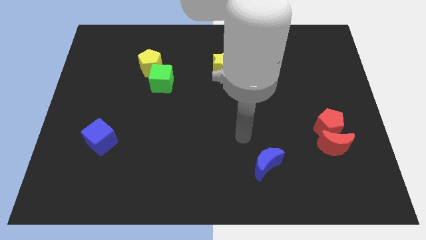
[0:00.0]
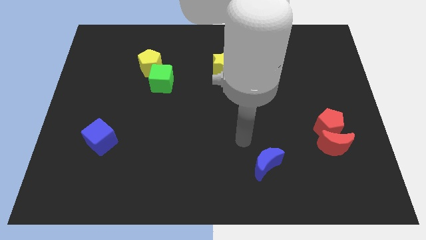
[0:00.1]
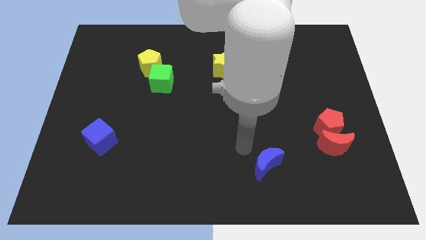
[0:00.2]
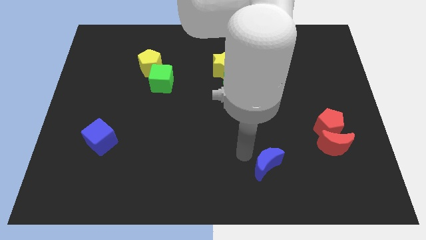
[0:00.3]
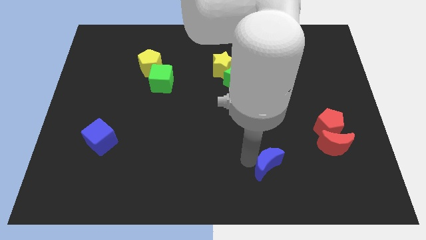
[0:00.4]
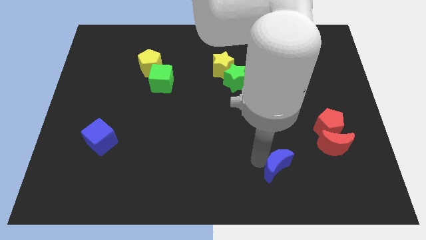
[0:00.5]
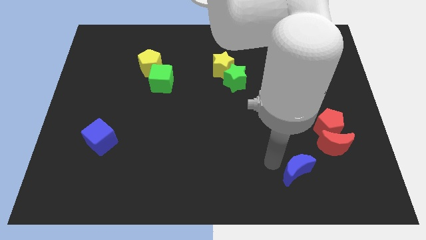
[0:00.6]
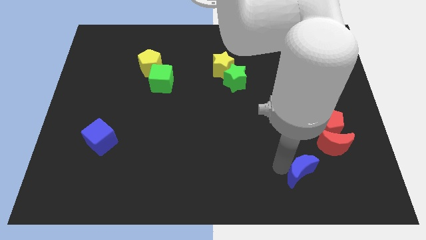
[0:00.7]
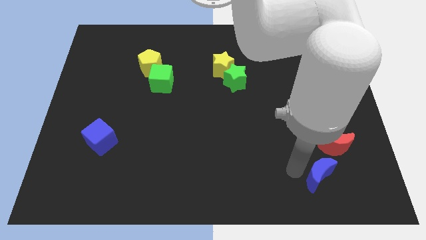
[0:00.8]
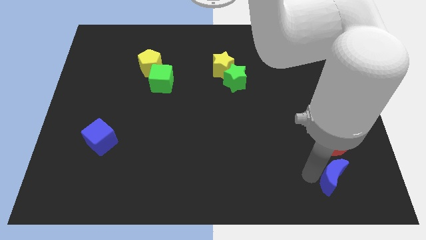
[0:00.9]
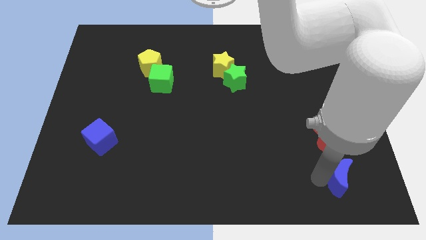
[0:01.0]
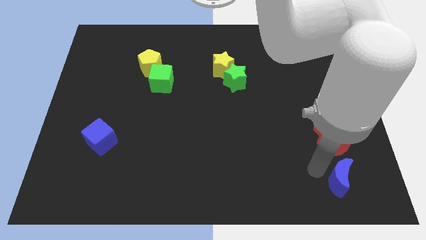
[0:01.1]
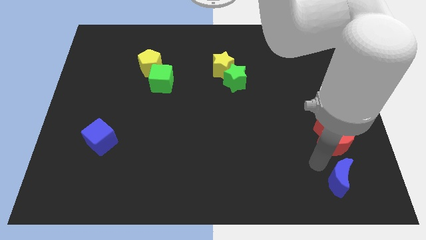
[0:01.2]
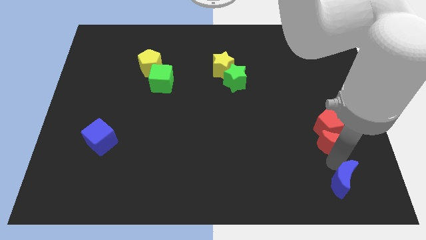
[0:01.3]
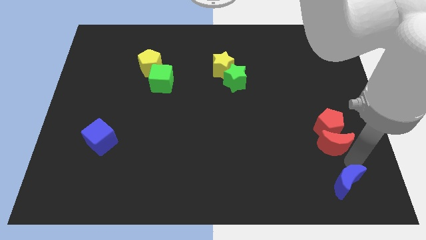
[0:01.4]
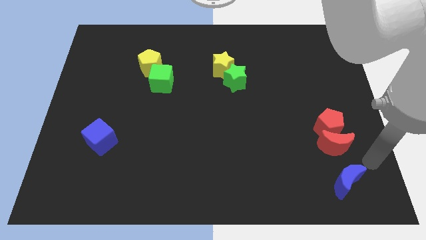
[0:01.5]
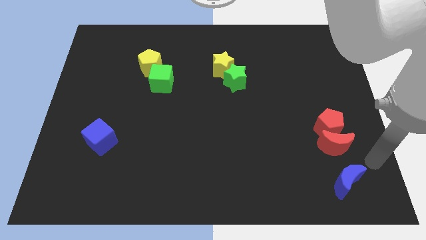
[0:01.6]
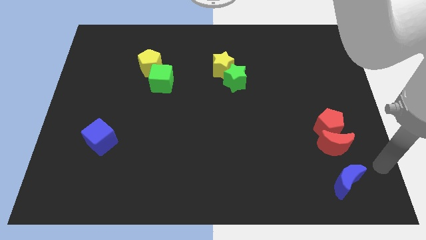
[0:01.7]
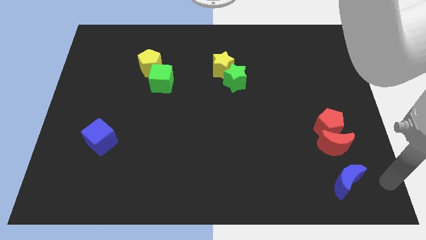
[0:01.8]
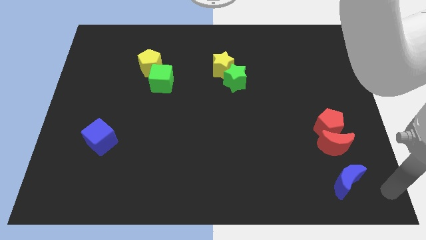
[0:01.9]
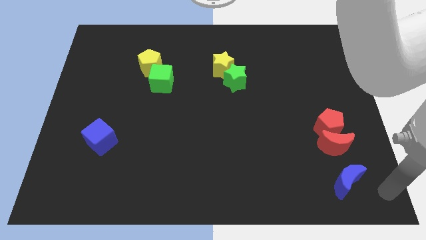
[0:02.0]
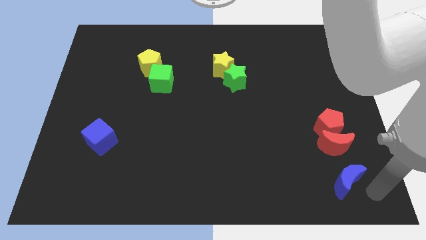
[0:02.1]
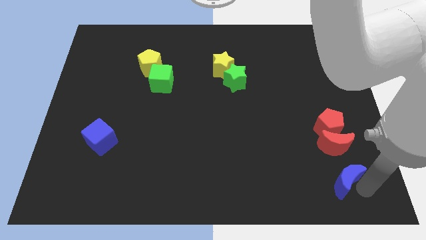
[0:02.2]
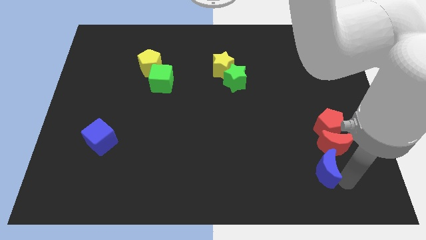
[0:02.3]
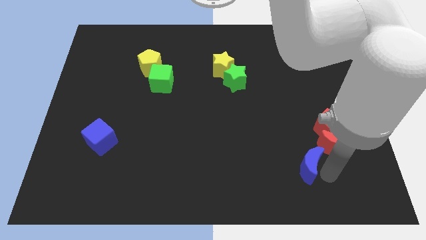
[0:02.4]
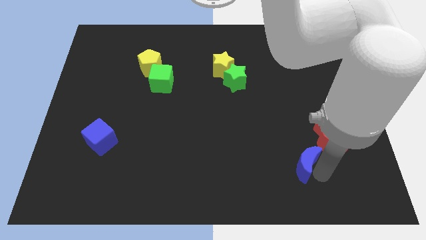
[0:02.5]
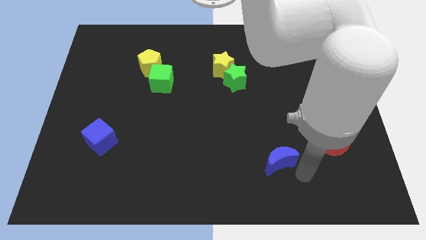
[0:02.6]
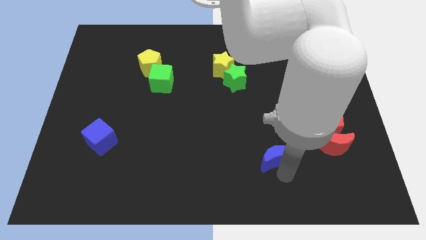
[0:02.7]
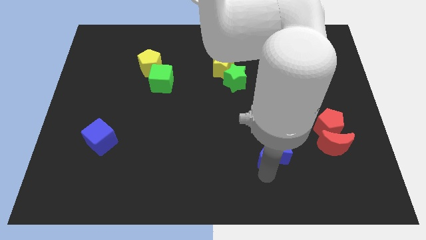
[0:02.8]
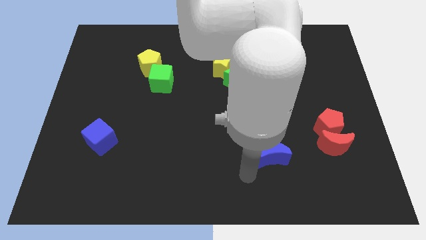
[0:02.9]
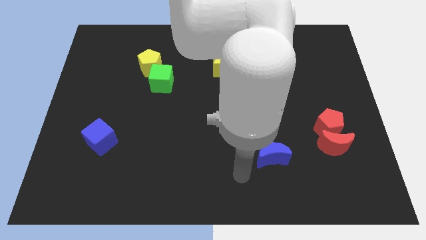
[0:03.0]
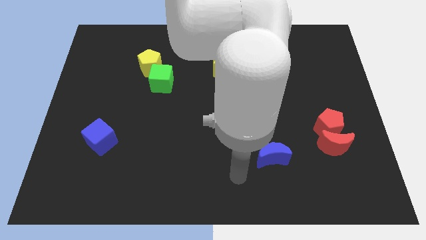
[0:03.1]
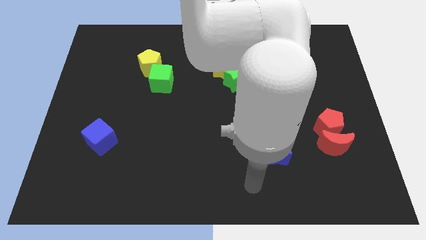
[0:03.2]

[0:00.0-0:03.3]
place the blue crescent to the left of the red crescent

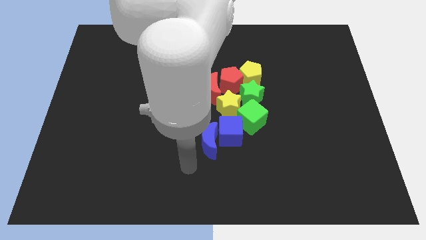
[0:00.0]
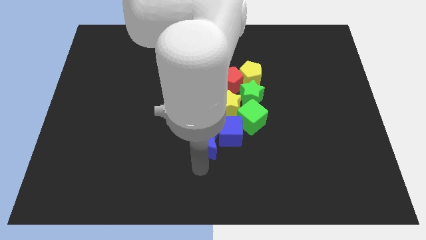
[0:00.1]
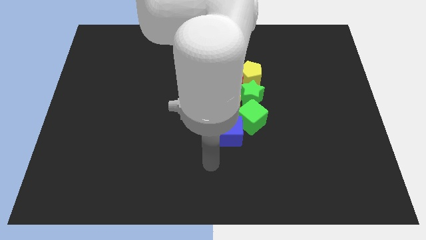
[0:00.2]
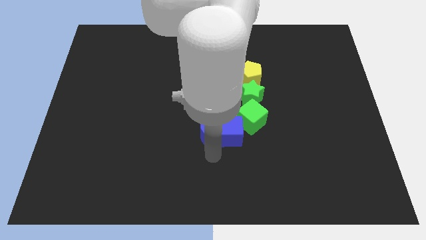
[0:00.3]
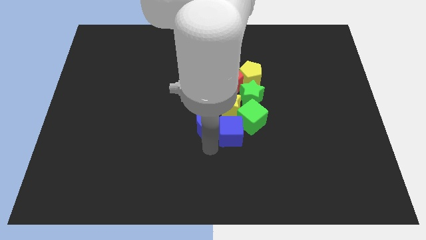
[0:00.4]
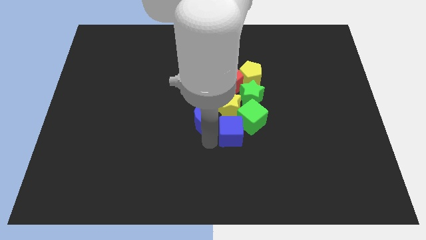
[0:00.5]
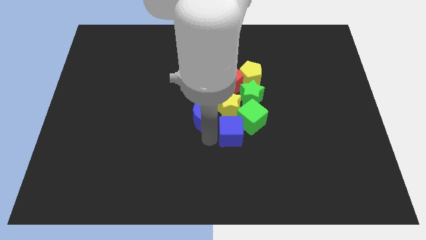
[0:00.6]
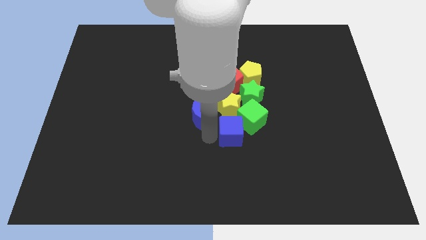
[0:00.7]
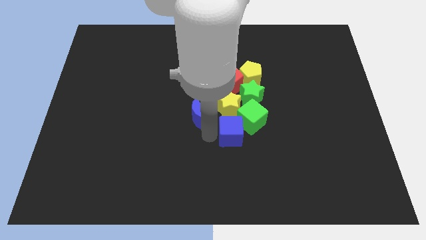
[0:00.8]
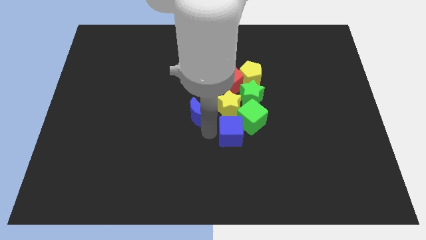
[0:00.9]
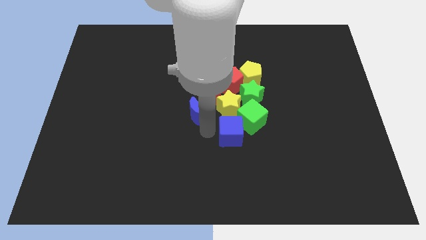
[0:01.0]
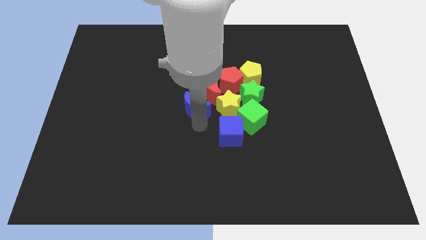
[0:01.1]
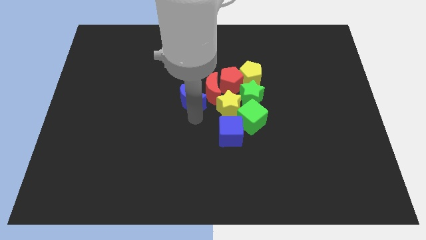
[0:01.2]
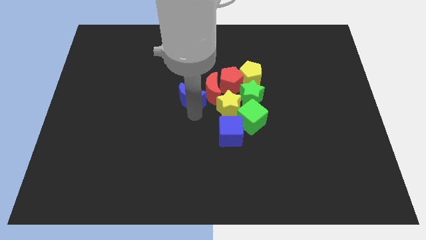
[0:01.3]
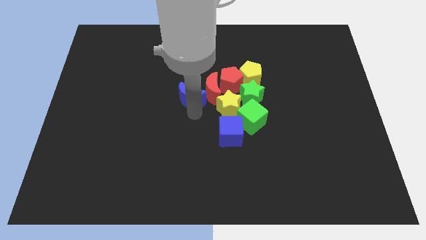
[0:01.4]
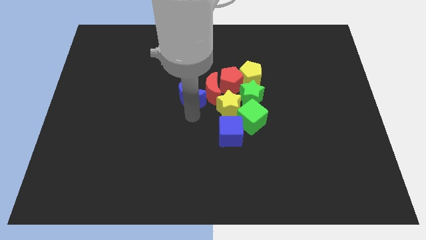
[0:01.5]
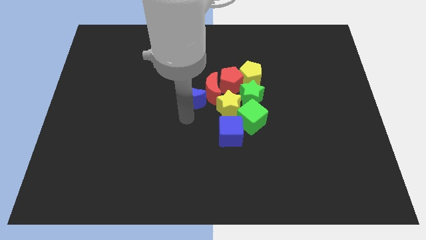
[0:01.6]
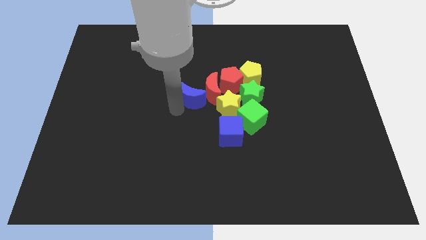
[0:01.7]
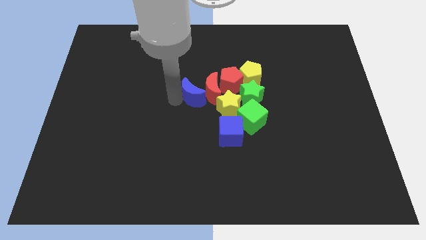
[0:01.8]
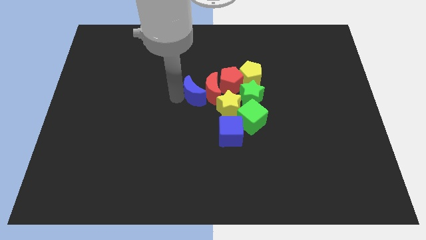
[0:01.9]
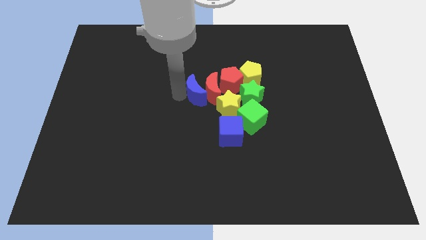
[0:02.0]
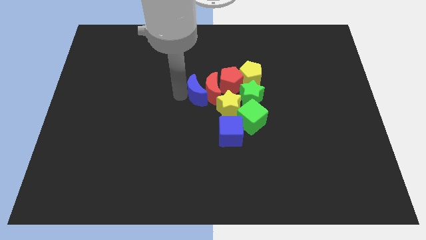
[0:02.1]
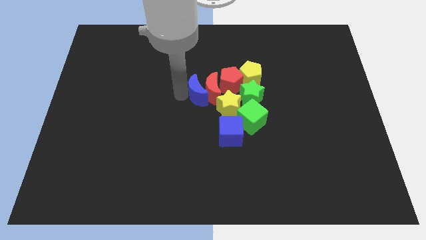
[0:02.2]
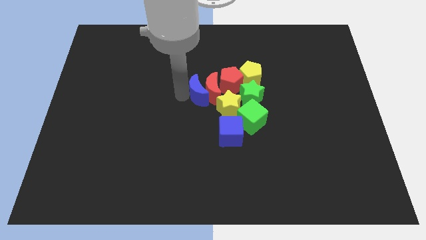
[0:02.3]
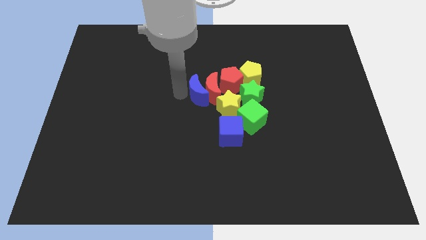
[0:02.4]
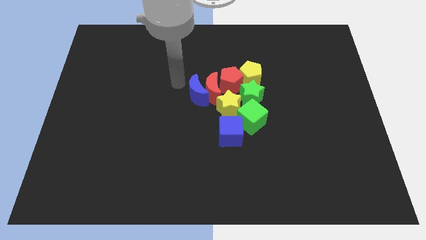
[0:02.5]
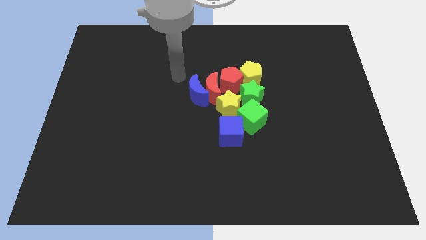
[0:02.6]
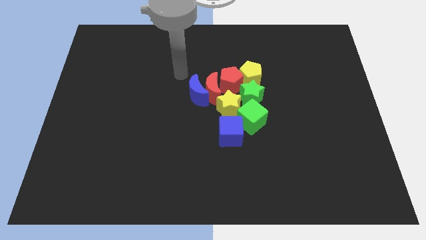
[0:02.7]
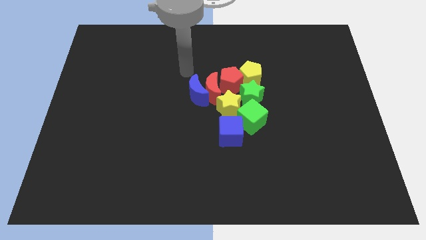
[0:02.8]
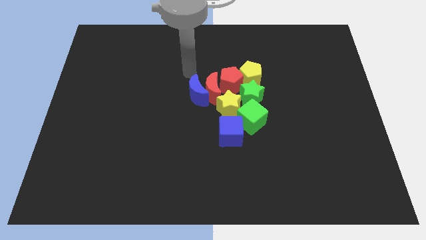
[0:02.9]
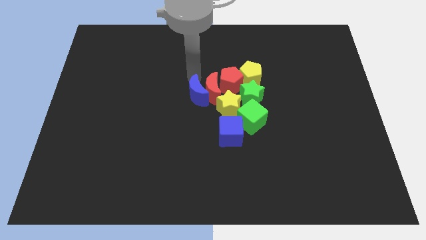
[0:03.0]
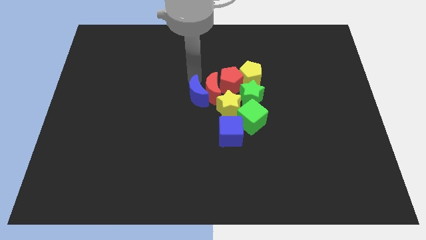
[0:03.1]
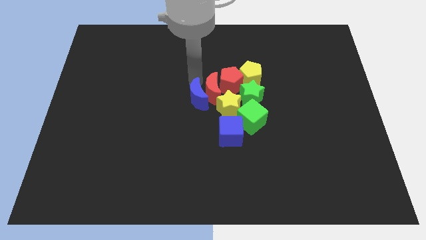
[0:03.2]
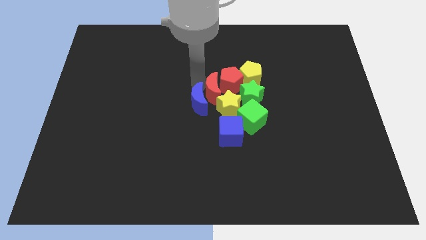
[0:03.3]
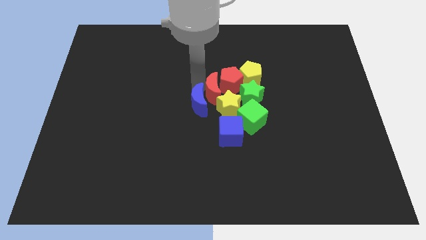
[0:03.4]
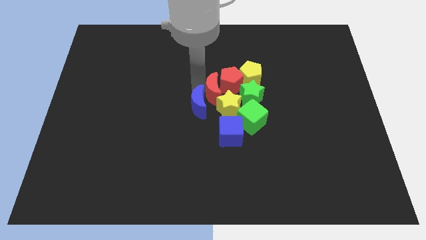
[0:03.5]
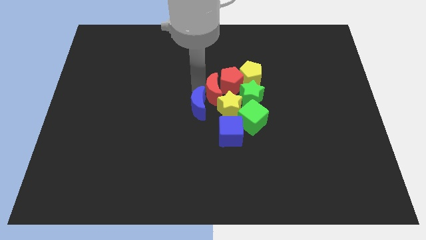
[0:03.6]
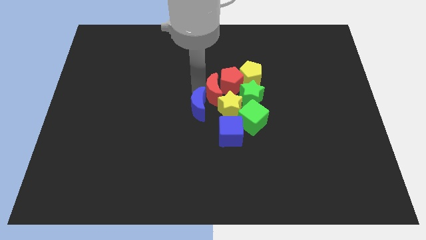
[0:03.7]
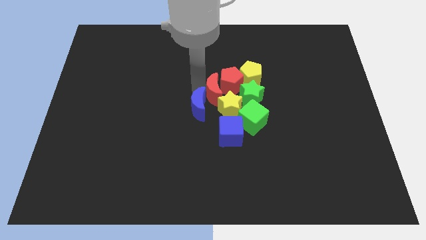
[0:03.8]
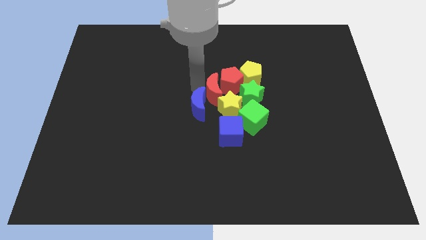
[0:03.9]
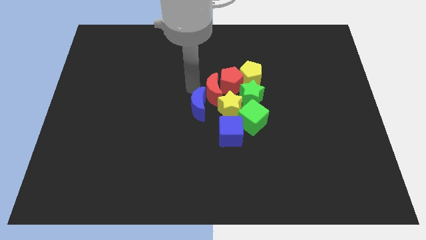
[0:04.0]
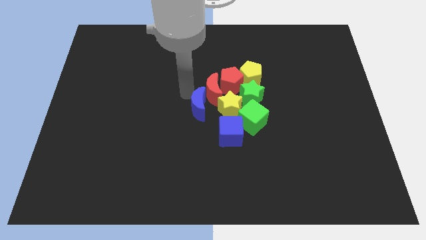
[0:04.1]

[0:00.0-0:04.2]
move the blue crescent into the left side of the red crescent

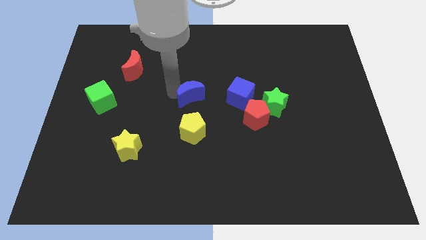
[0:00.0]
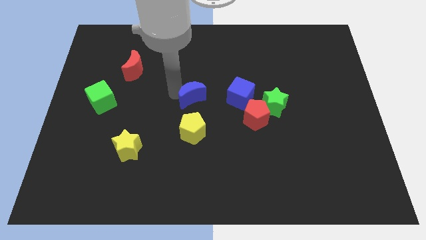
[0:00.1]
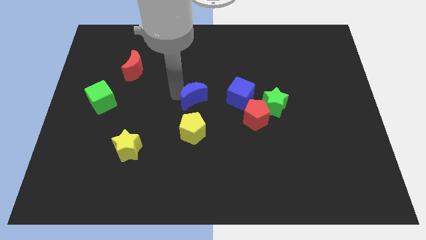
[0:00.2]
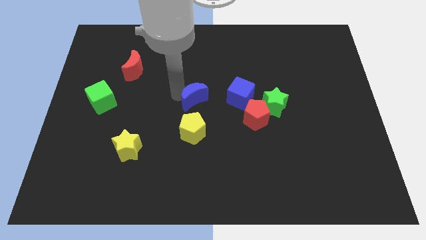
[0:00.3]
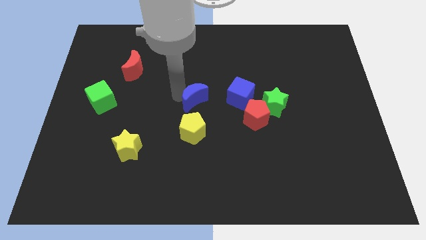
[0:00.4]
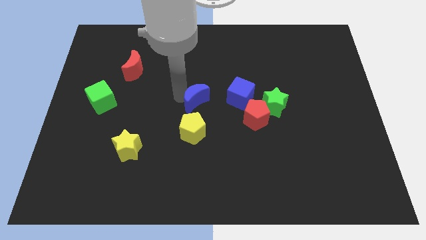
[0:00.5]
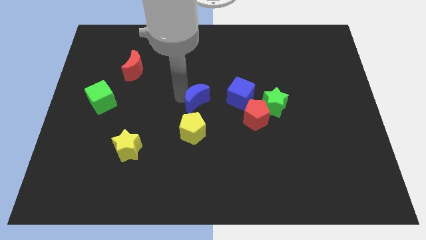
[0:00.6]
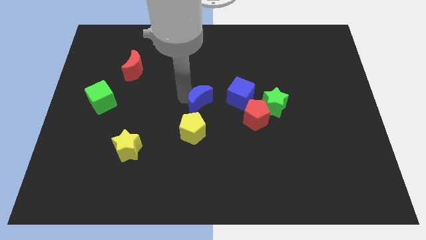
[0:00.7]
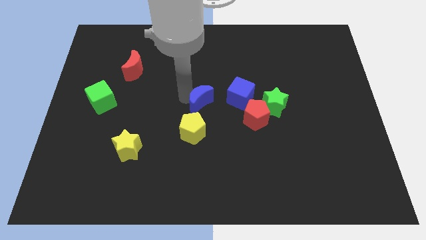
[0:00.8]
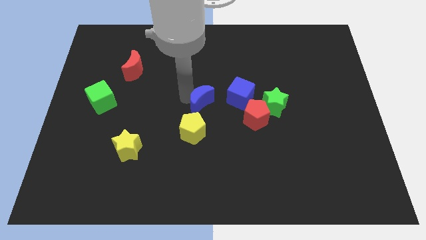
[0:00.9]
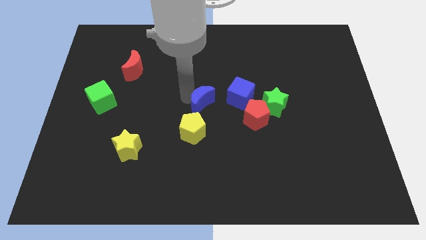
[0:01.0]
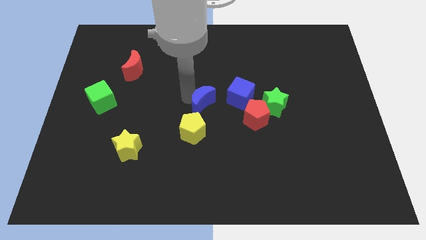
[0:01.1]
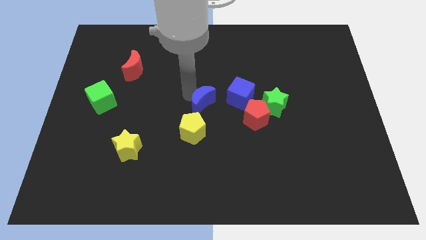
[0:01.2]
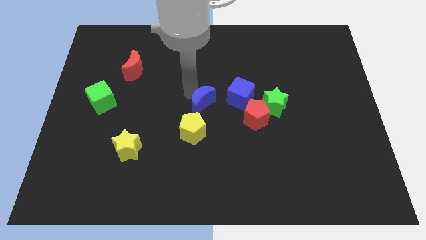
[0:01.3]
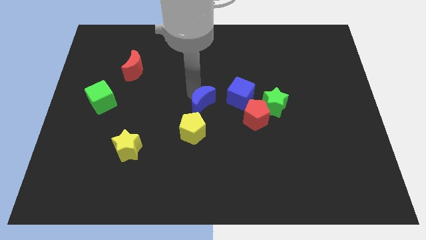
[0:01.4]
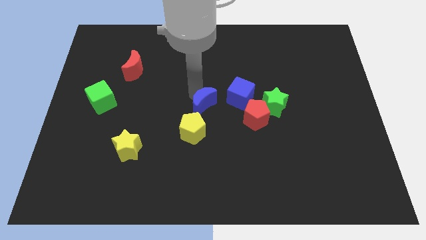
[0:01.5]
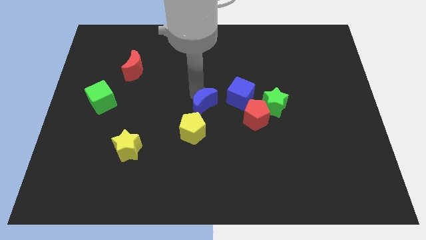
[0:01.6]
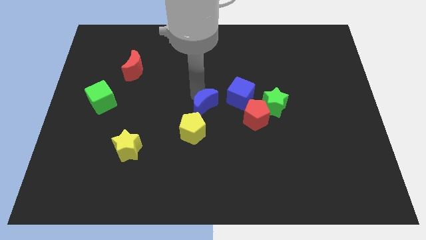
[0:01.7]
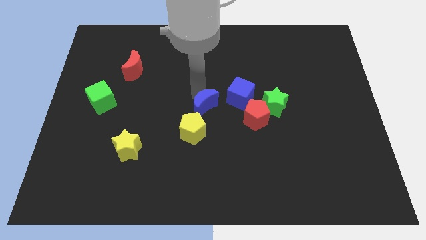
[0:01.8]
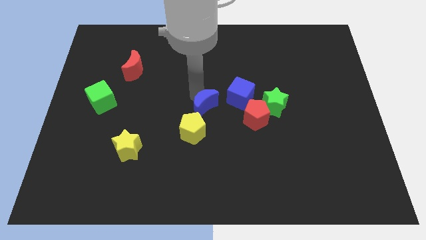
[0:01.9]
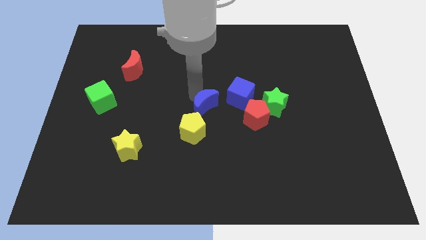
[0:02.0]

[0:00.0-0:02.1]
place blue moon at the center
